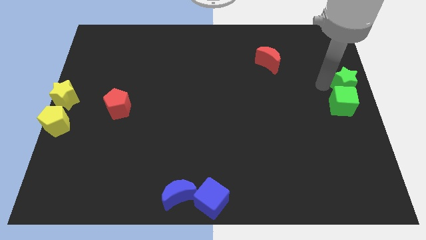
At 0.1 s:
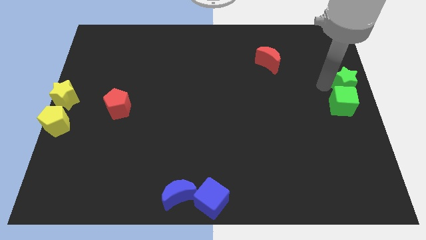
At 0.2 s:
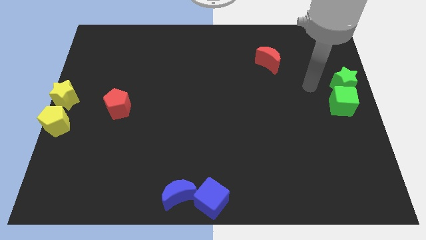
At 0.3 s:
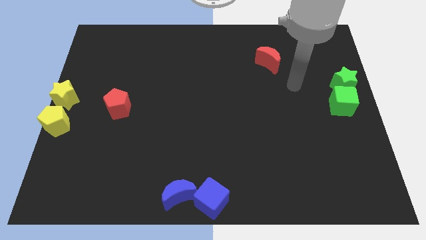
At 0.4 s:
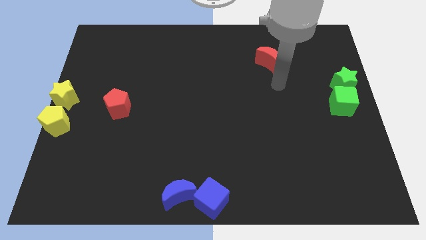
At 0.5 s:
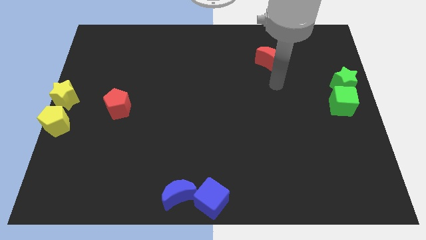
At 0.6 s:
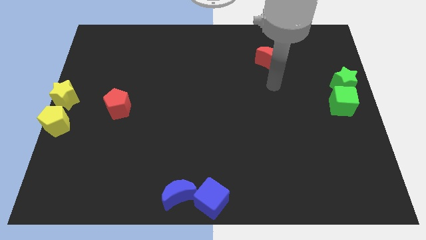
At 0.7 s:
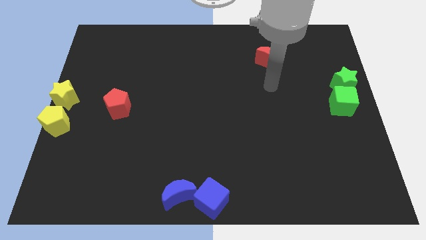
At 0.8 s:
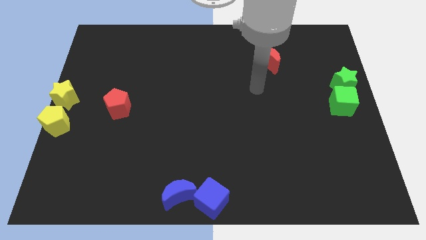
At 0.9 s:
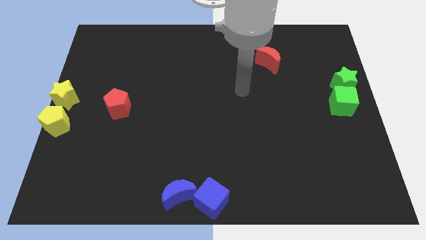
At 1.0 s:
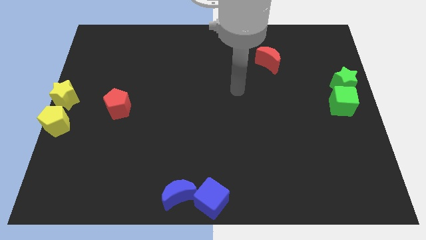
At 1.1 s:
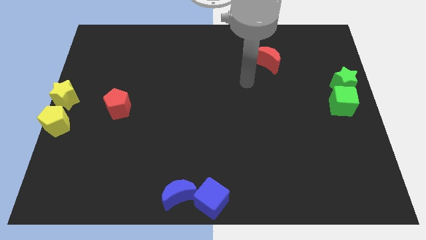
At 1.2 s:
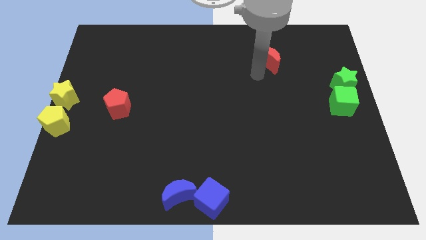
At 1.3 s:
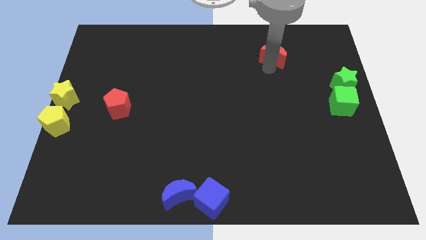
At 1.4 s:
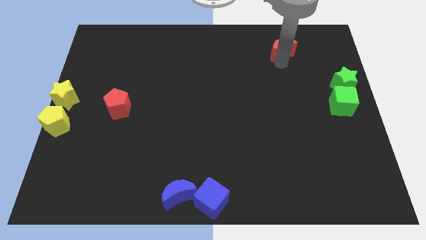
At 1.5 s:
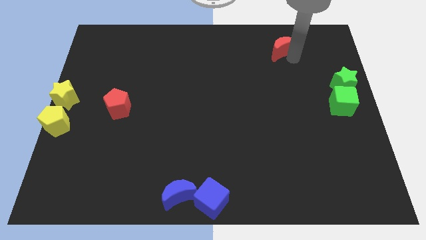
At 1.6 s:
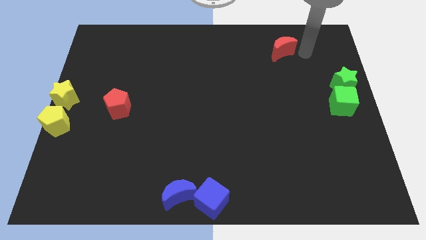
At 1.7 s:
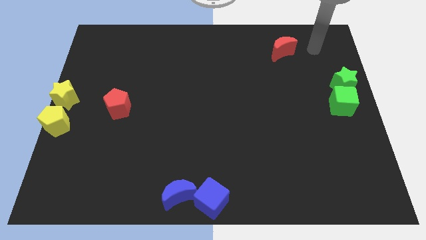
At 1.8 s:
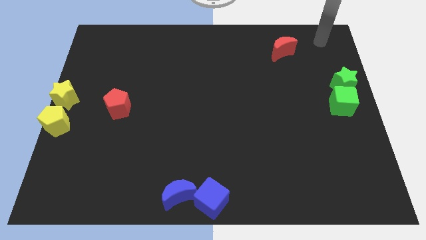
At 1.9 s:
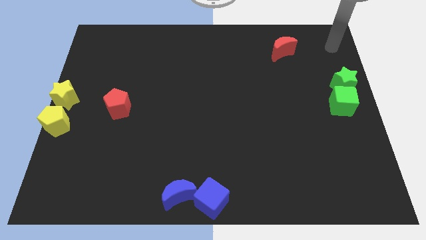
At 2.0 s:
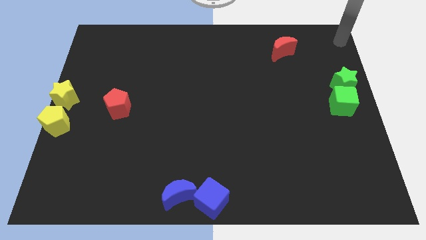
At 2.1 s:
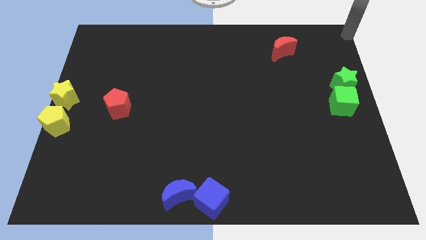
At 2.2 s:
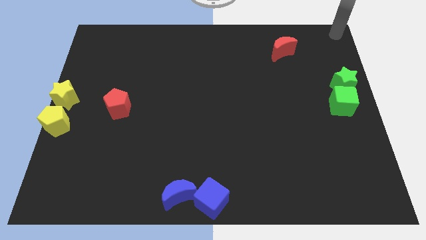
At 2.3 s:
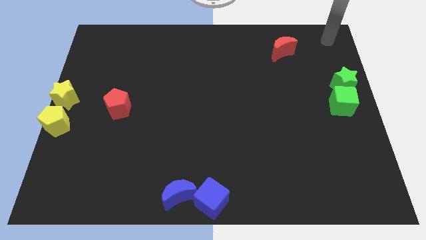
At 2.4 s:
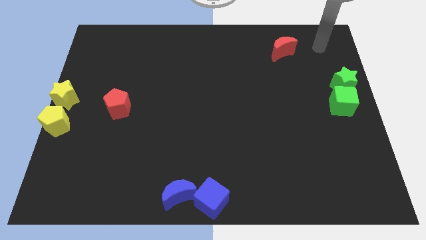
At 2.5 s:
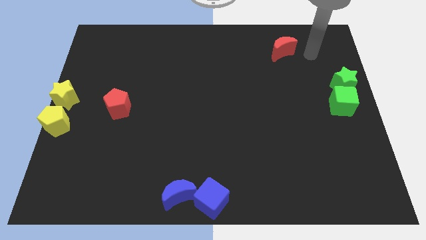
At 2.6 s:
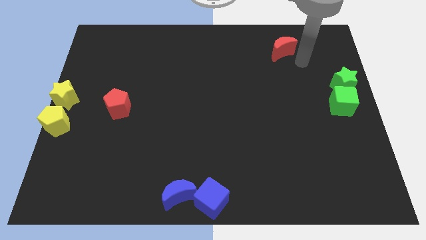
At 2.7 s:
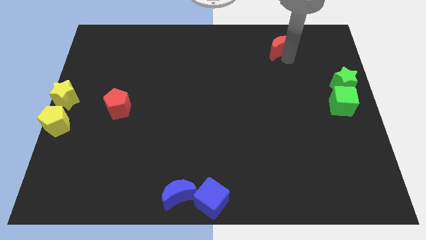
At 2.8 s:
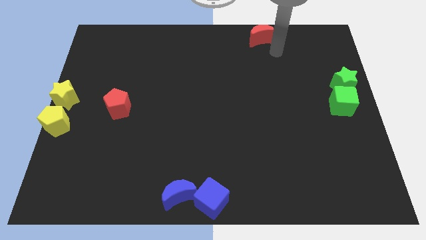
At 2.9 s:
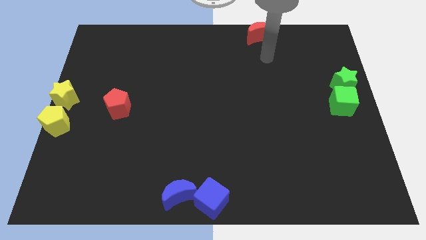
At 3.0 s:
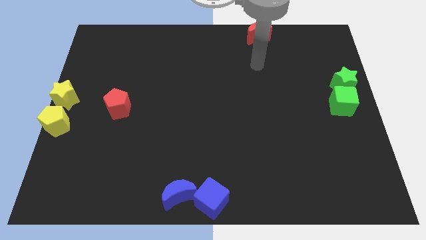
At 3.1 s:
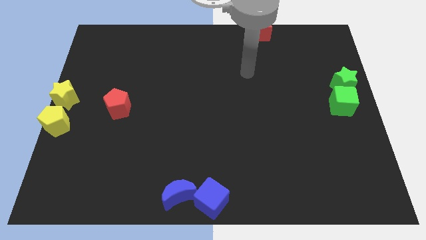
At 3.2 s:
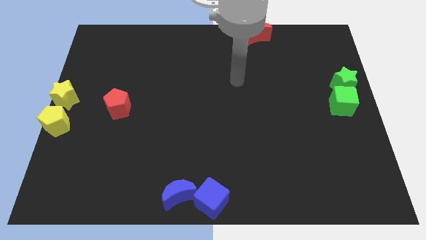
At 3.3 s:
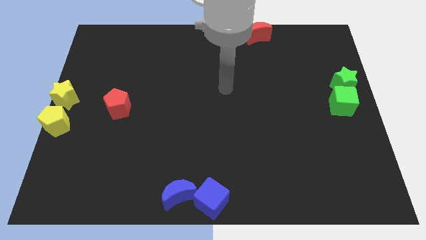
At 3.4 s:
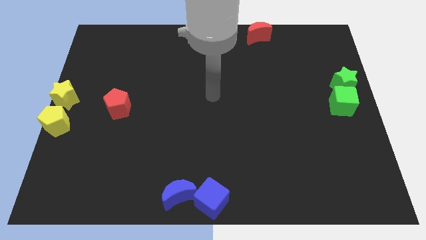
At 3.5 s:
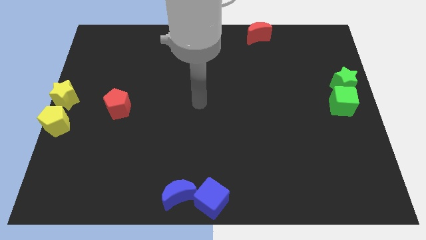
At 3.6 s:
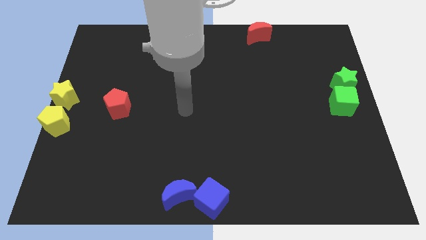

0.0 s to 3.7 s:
move the red moon to the top middle of the board

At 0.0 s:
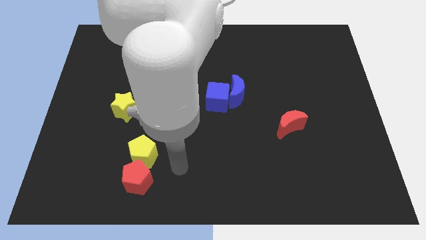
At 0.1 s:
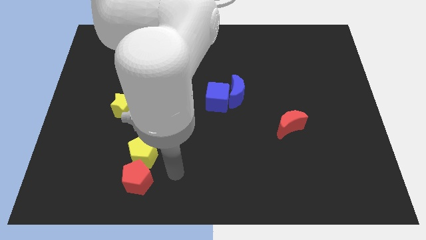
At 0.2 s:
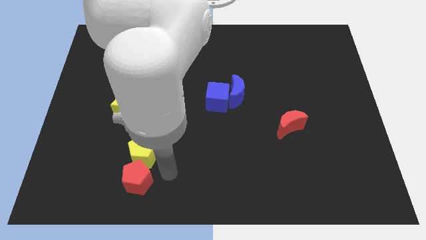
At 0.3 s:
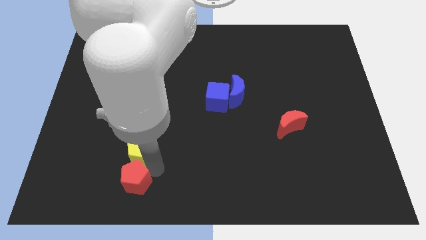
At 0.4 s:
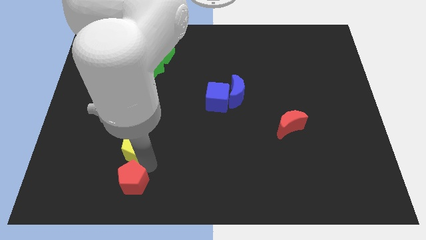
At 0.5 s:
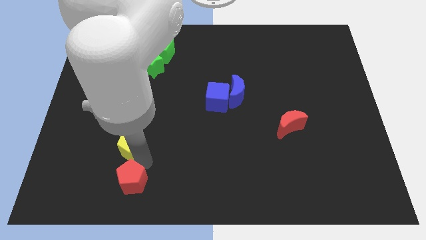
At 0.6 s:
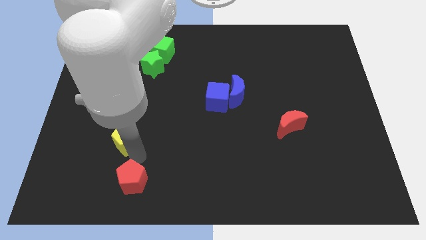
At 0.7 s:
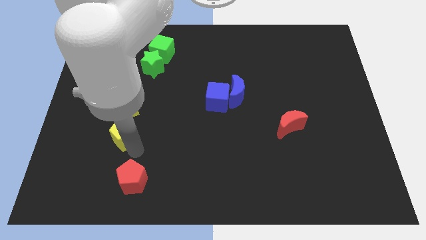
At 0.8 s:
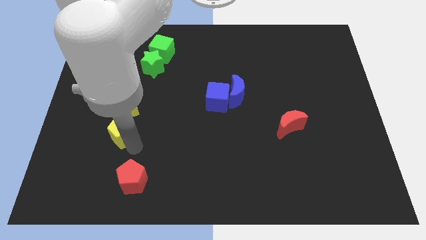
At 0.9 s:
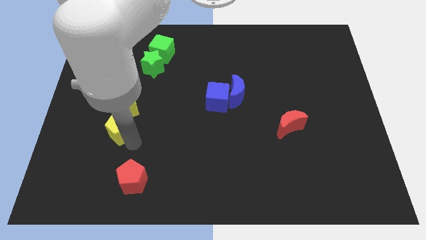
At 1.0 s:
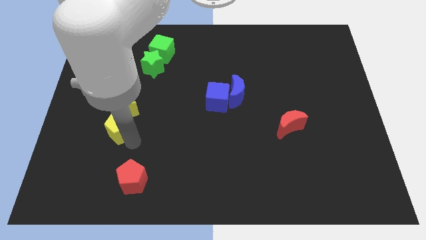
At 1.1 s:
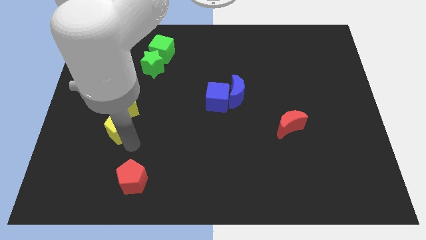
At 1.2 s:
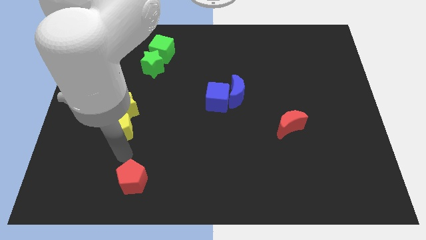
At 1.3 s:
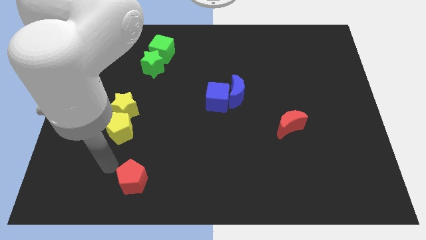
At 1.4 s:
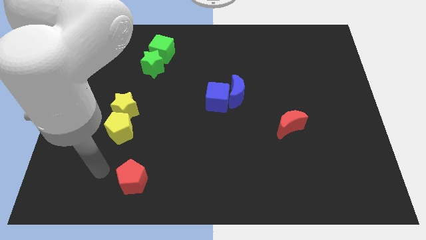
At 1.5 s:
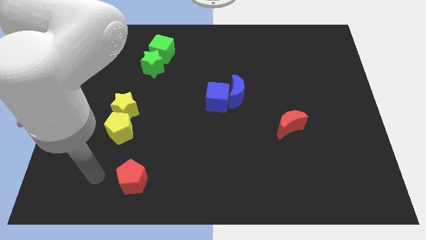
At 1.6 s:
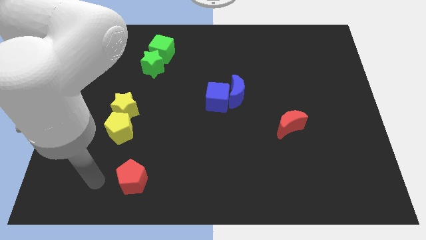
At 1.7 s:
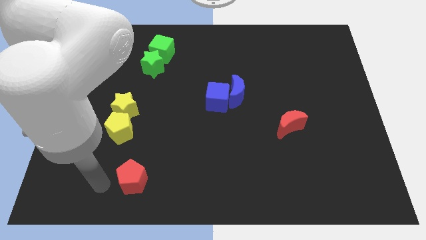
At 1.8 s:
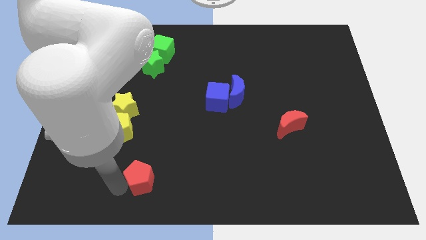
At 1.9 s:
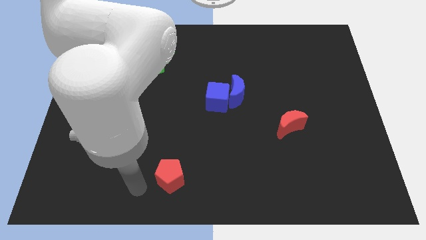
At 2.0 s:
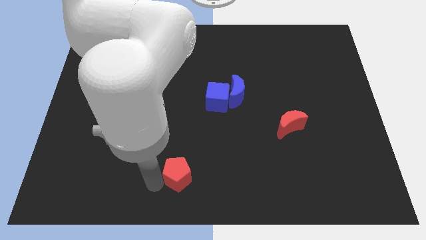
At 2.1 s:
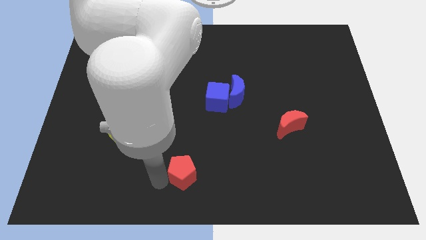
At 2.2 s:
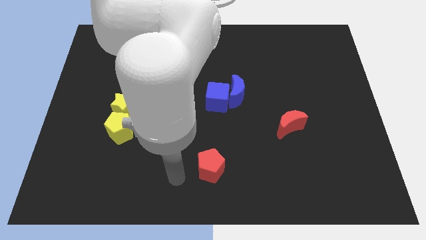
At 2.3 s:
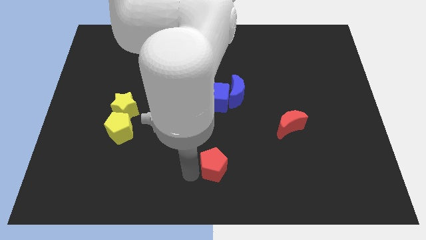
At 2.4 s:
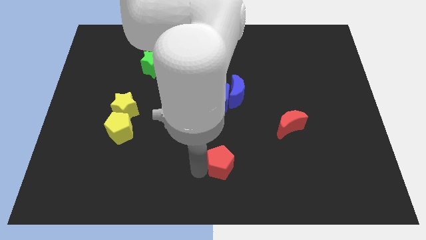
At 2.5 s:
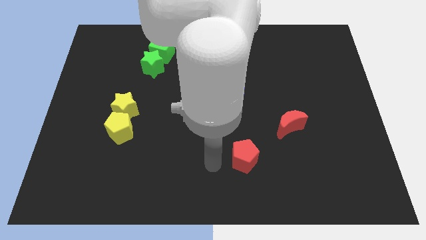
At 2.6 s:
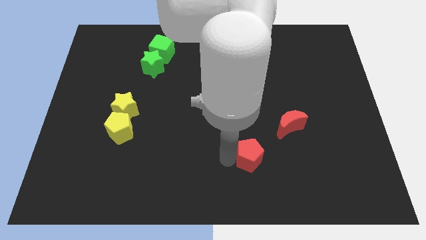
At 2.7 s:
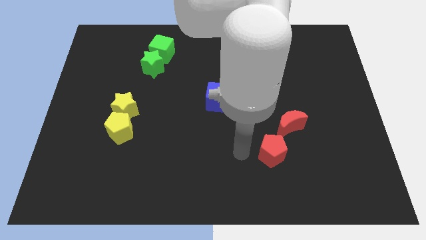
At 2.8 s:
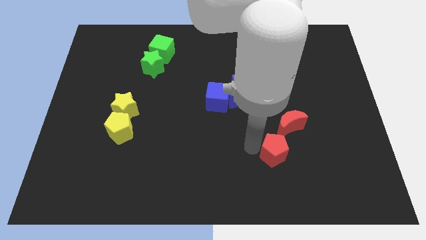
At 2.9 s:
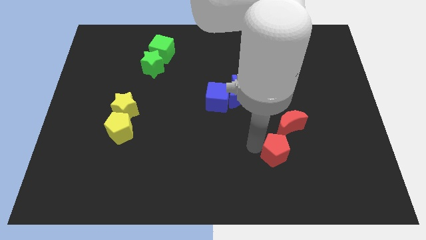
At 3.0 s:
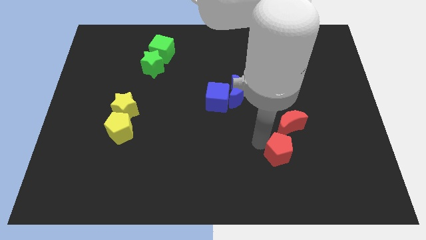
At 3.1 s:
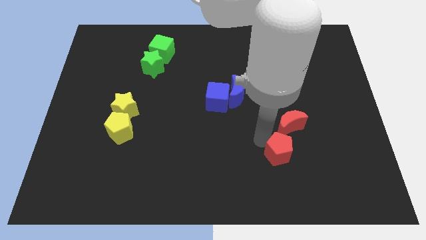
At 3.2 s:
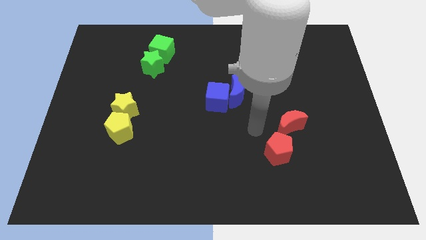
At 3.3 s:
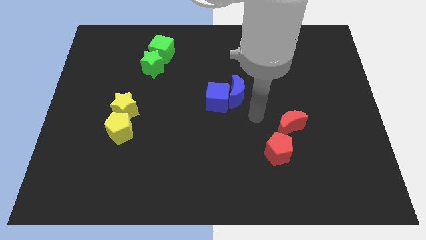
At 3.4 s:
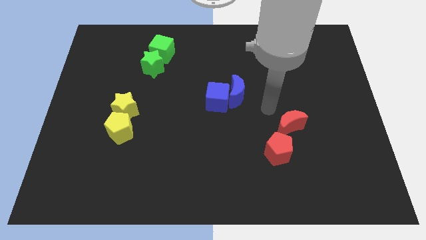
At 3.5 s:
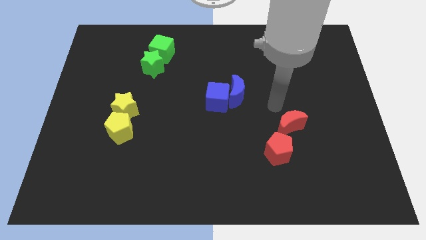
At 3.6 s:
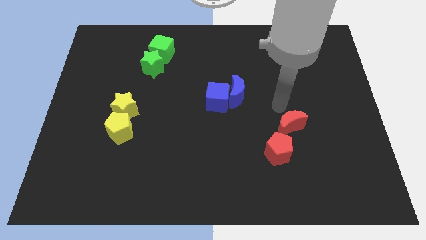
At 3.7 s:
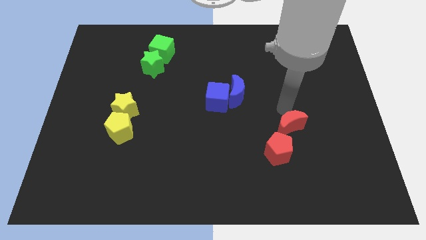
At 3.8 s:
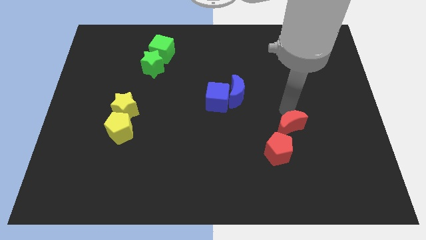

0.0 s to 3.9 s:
push the yellow pentagon away from the red pentagon

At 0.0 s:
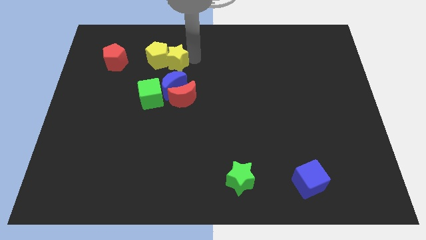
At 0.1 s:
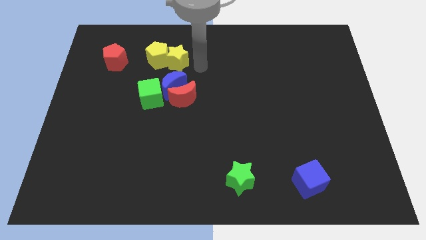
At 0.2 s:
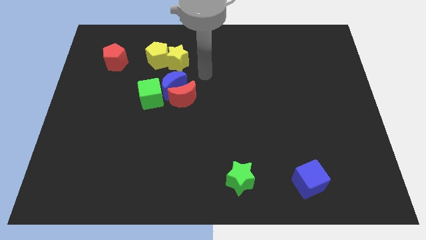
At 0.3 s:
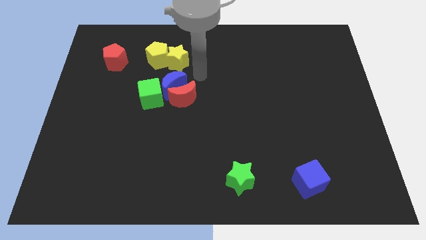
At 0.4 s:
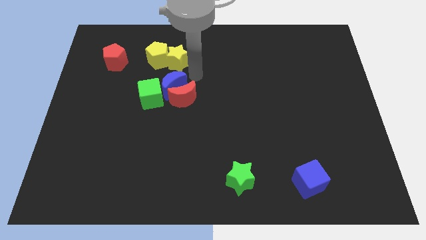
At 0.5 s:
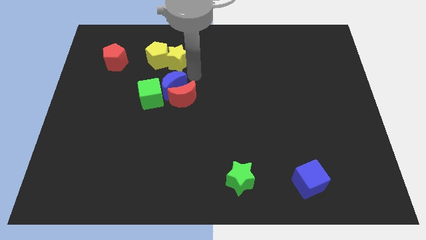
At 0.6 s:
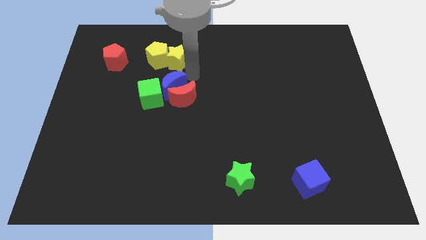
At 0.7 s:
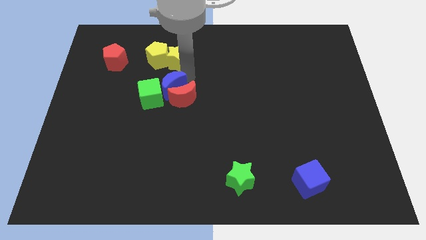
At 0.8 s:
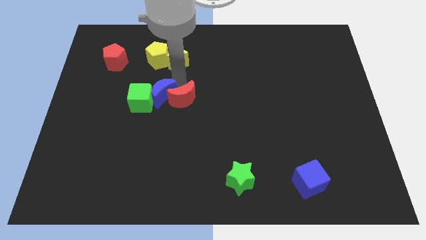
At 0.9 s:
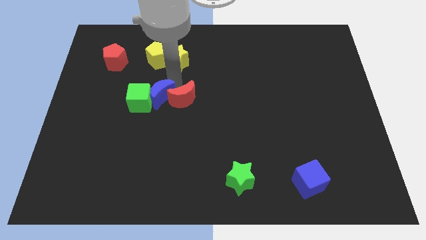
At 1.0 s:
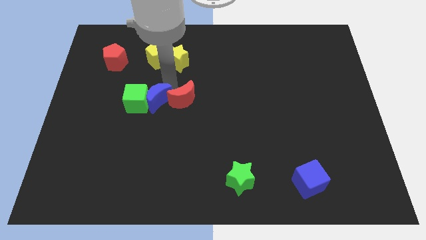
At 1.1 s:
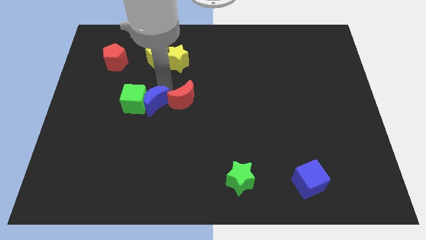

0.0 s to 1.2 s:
arrange the blue moon in between the red moon and green cube
